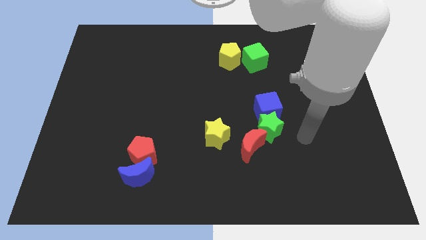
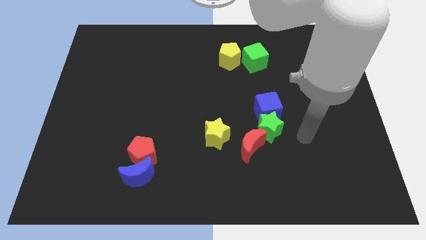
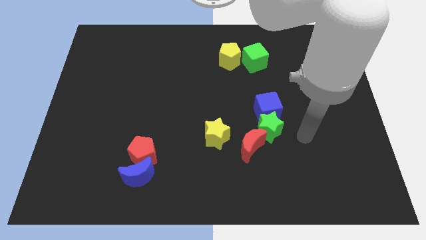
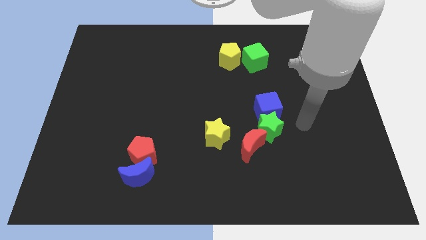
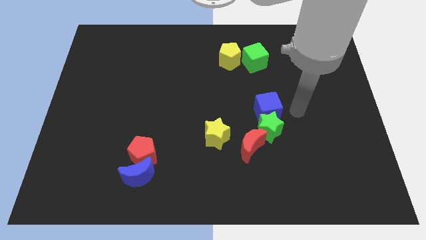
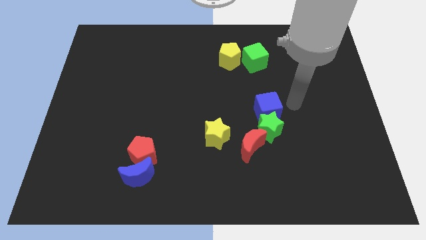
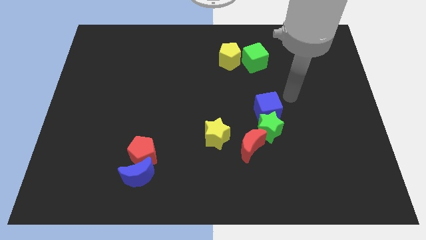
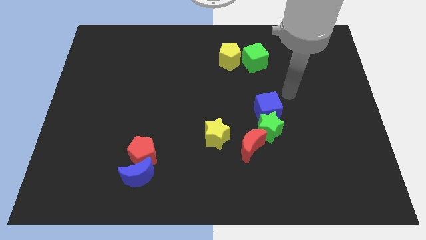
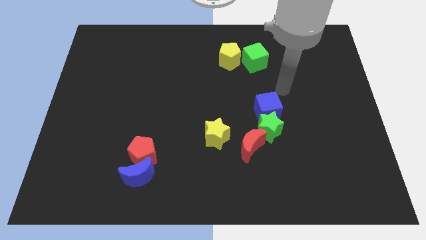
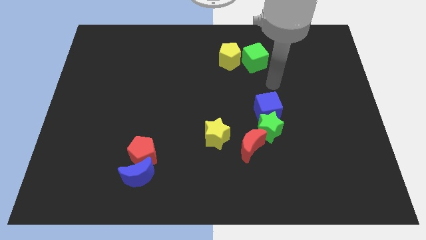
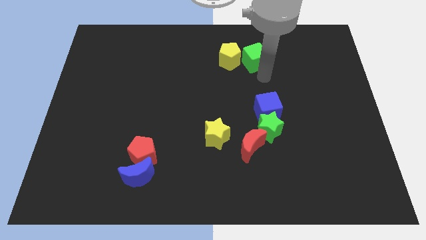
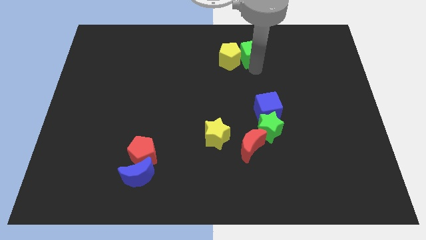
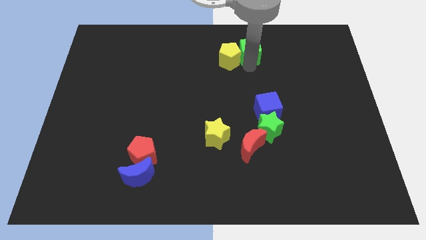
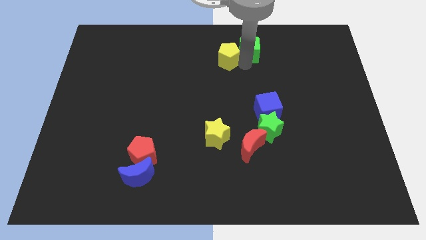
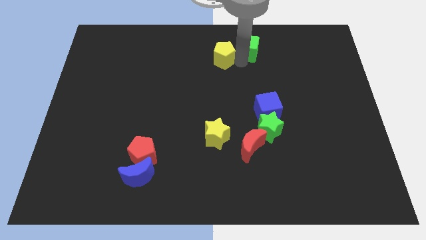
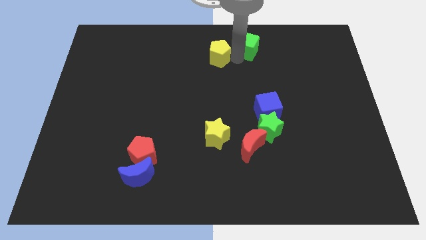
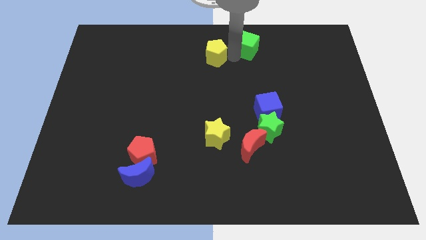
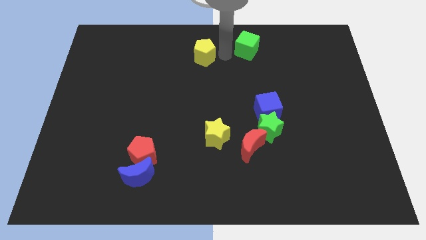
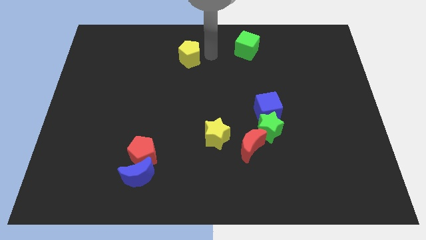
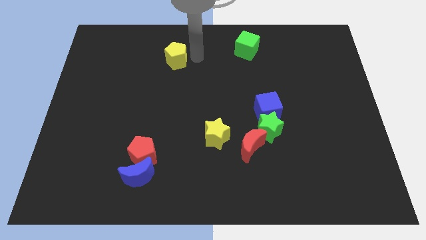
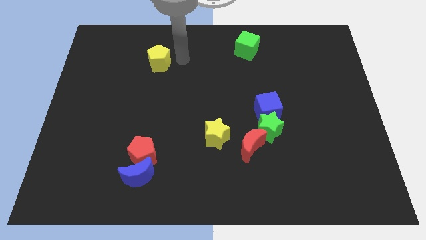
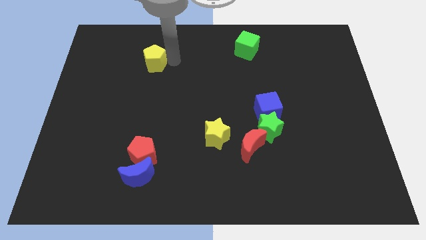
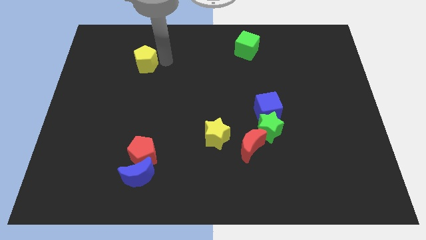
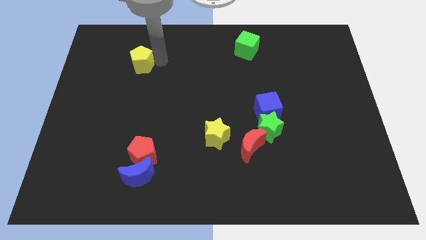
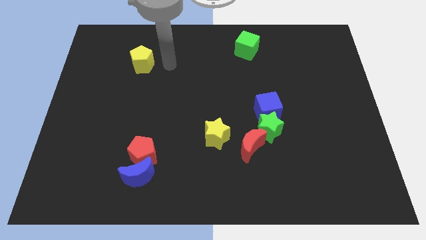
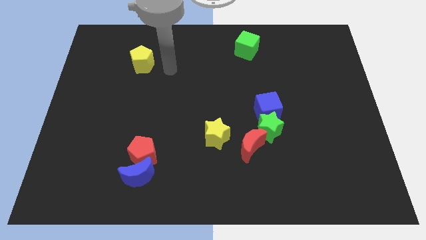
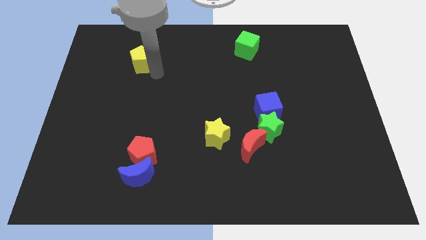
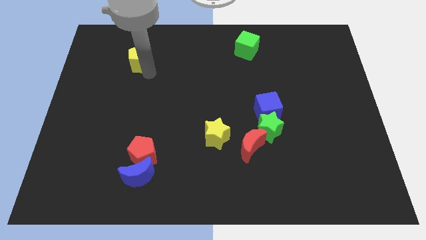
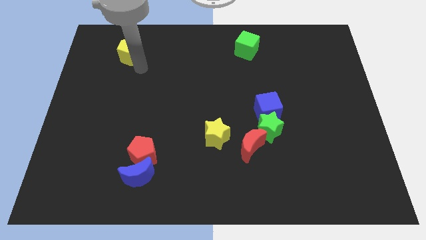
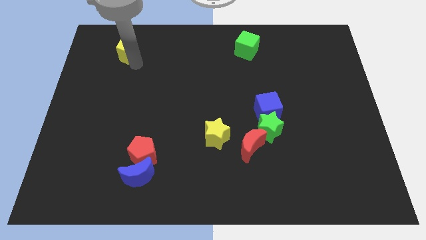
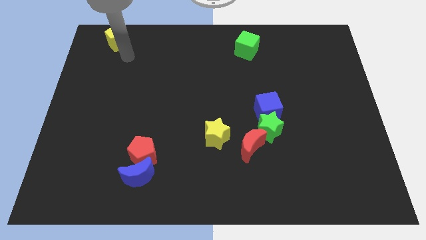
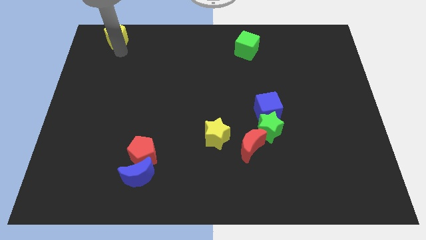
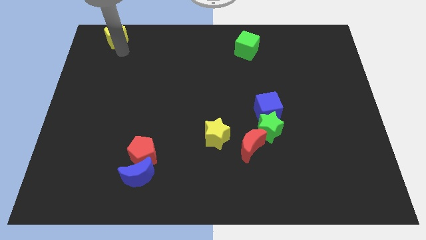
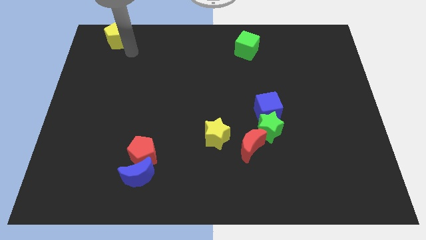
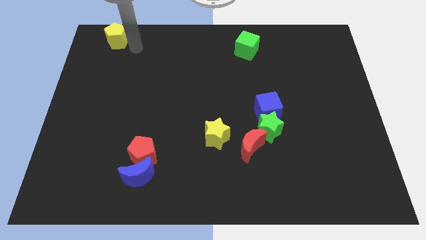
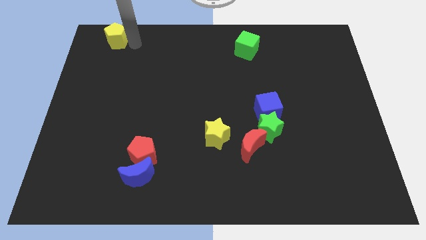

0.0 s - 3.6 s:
move the yellow pentagon to the left side

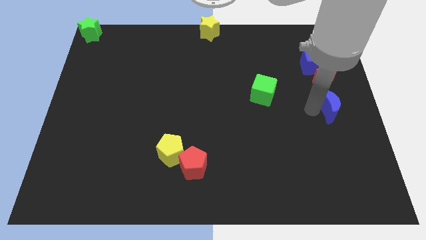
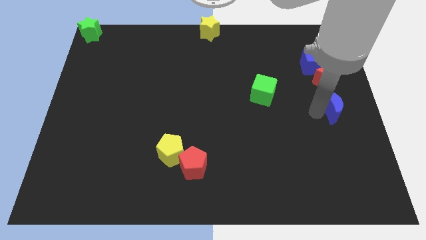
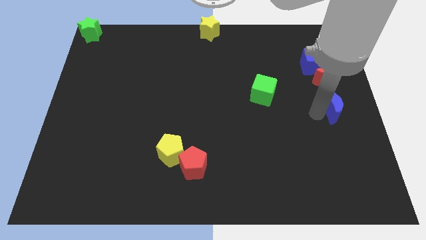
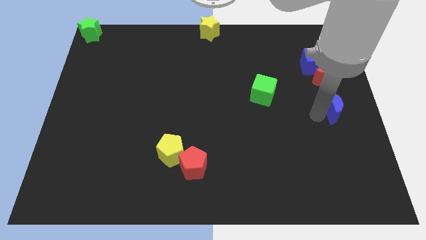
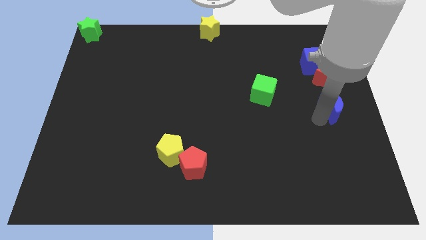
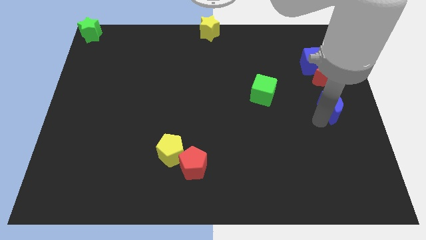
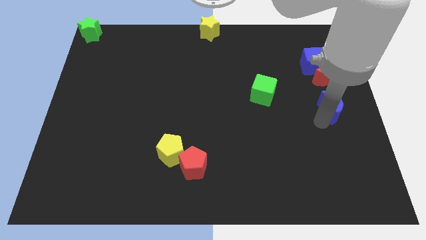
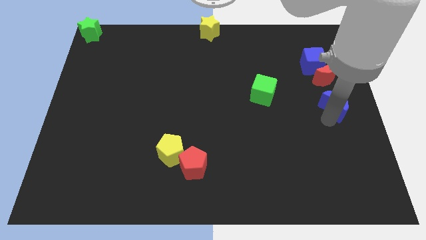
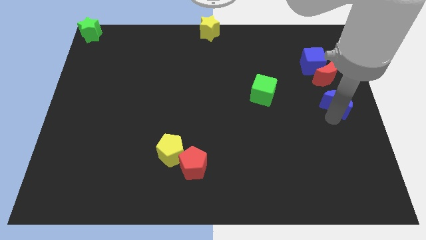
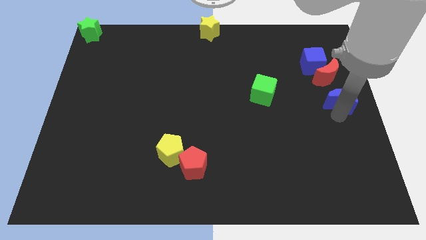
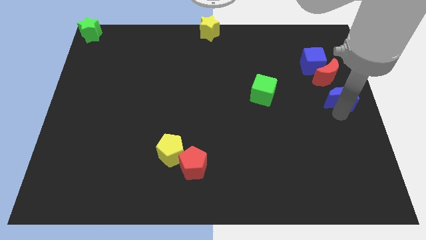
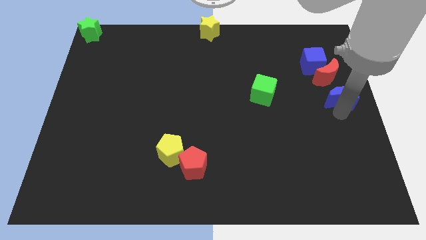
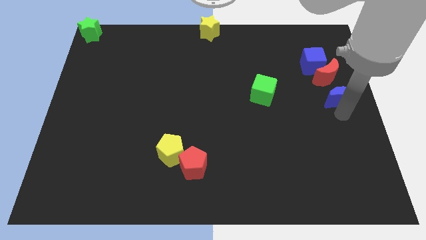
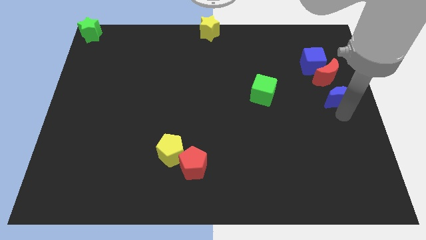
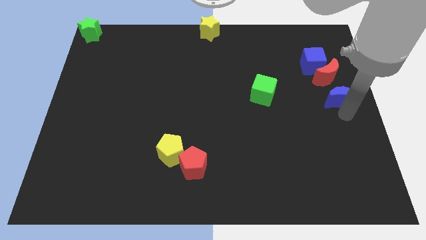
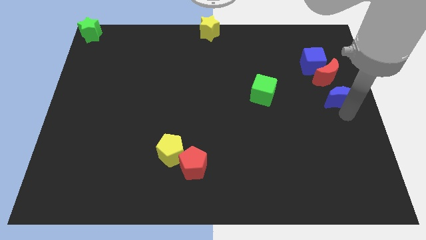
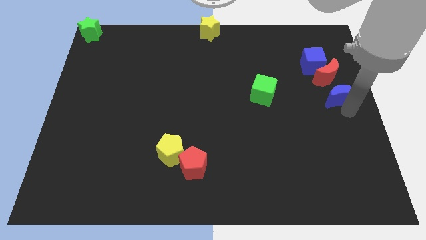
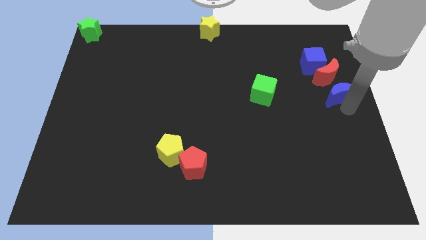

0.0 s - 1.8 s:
place blue crescent below red crescent

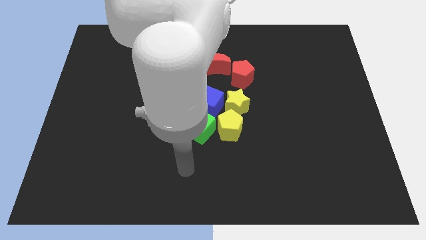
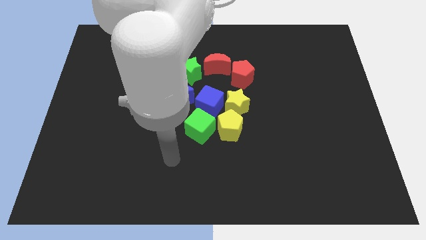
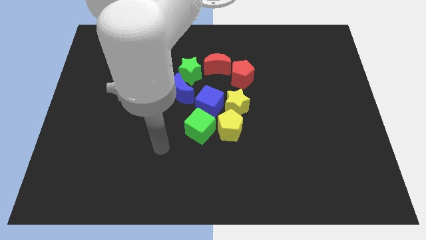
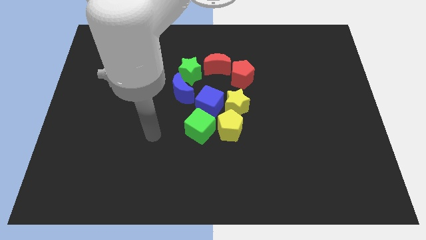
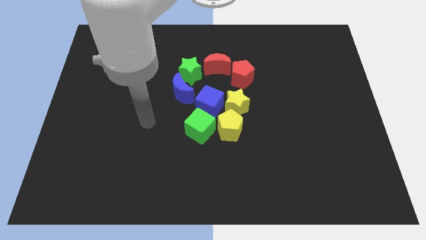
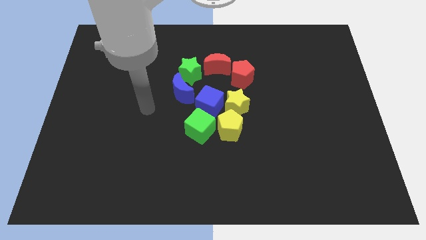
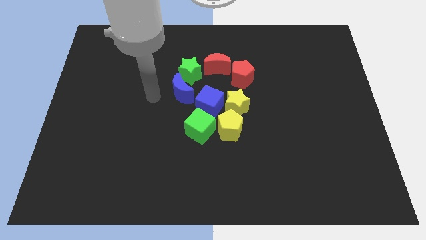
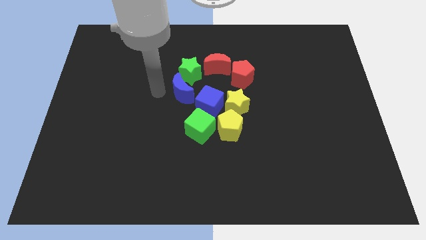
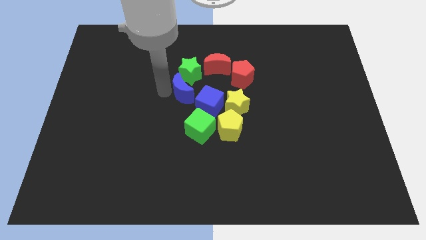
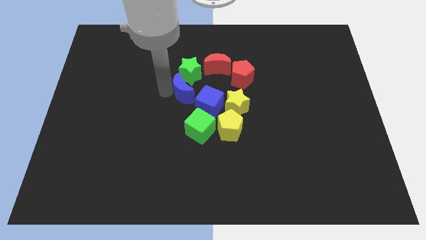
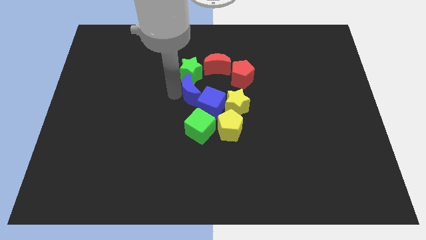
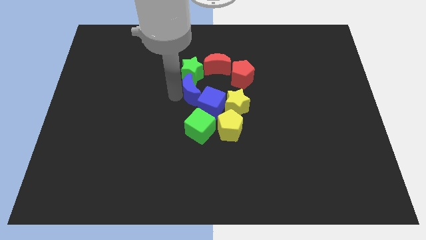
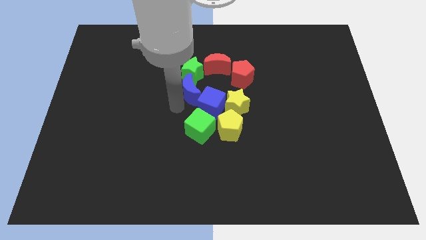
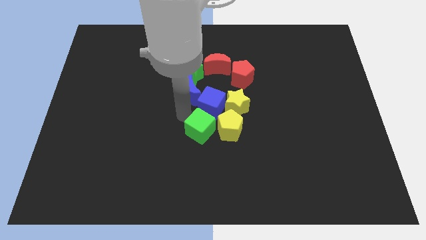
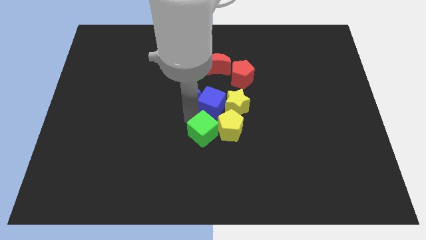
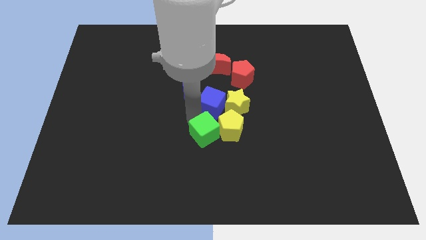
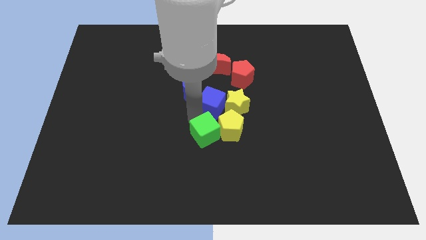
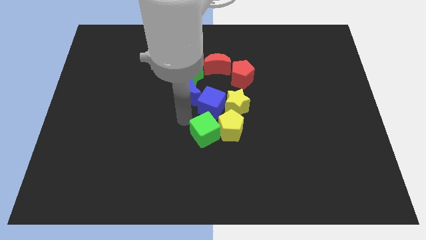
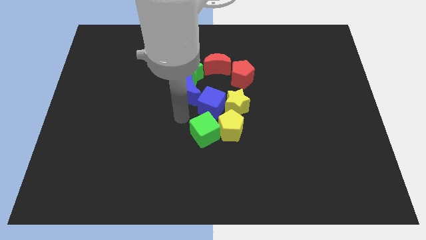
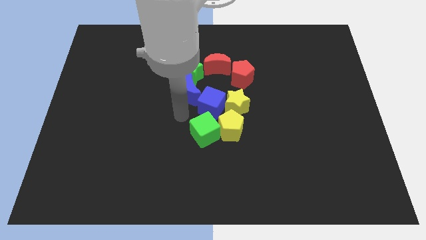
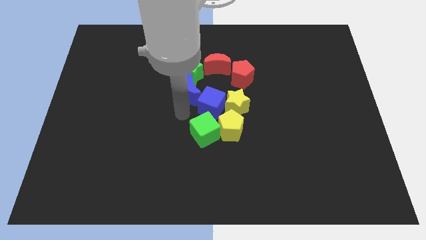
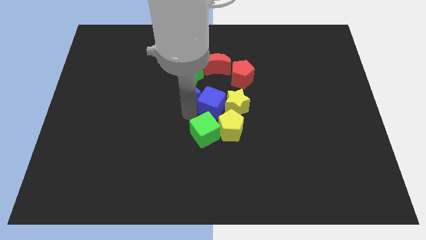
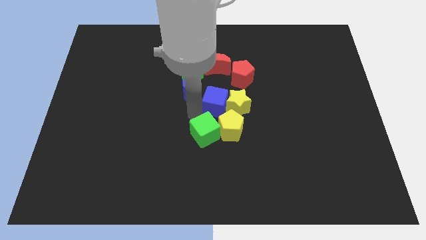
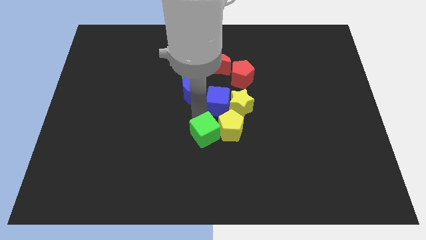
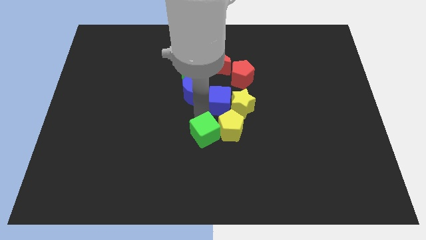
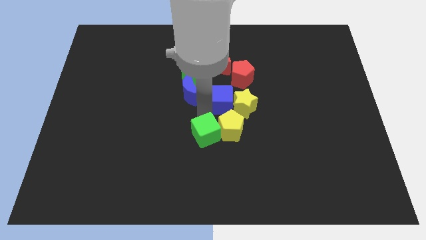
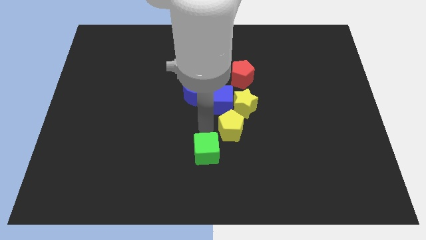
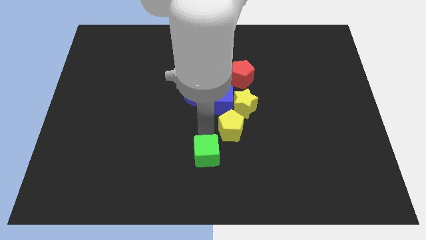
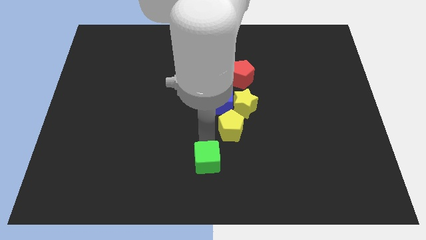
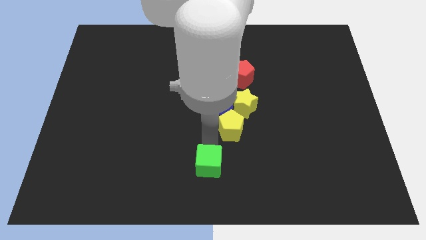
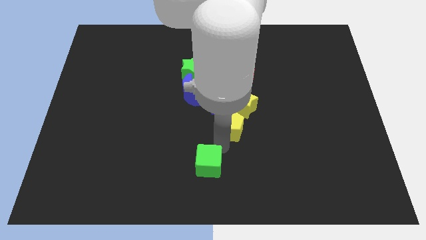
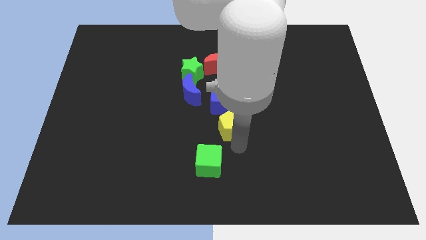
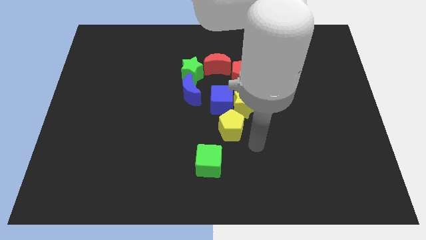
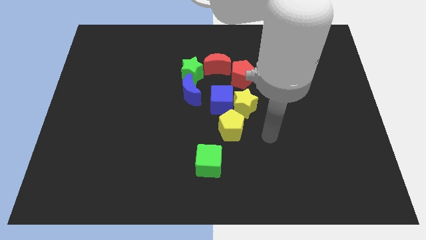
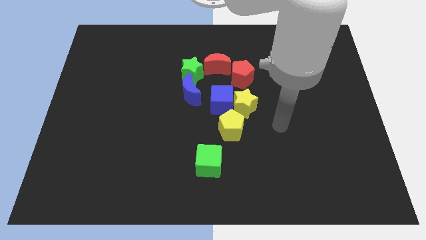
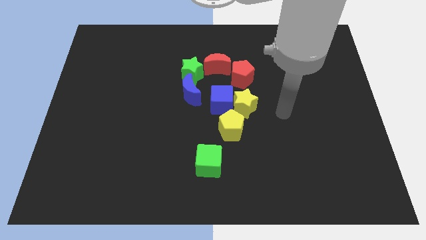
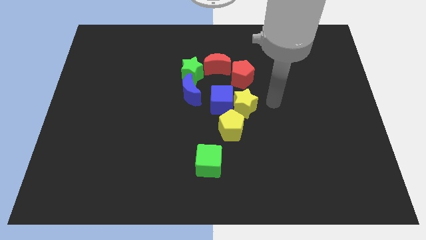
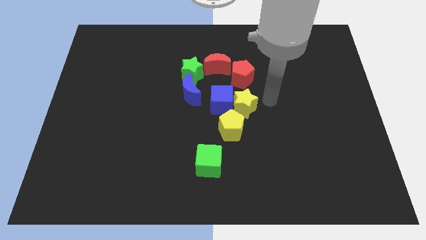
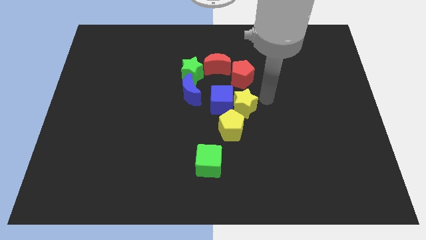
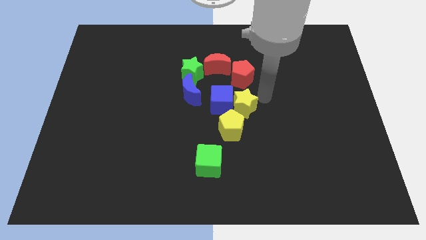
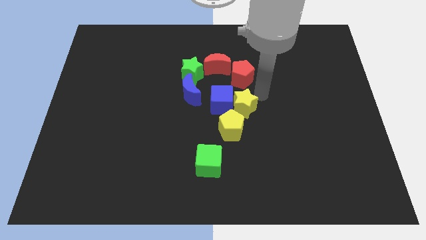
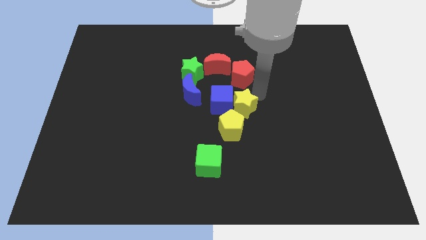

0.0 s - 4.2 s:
separate the green cube from the group of blocks
